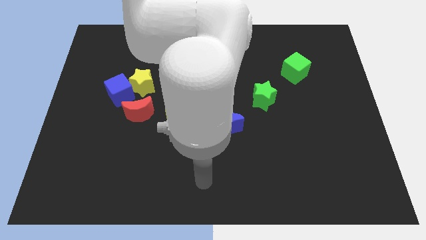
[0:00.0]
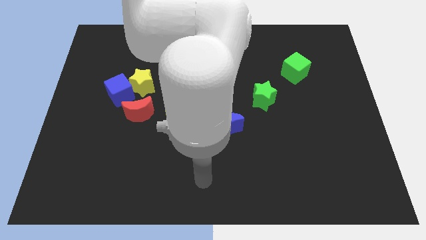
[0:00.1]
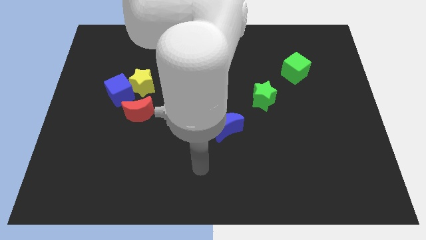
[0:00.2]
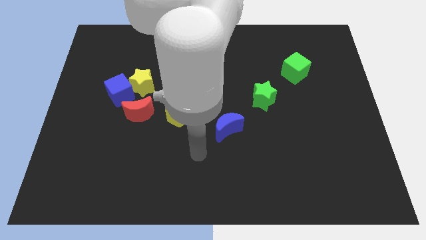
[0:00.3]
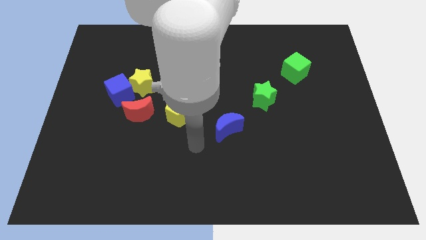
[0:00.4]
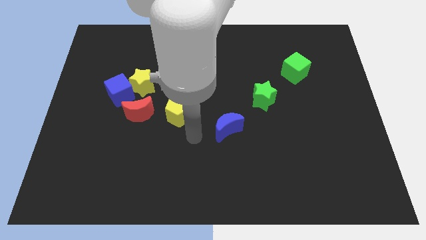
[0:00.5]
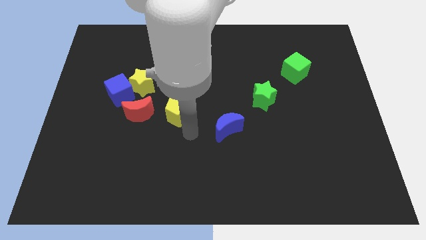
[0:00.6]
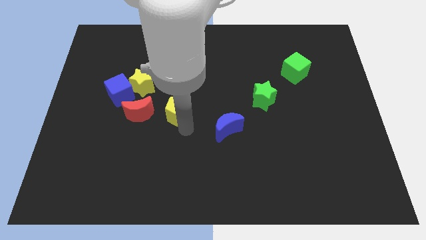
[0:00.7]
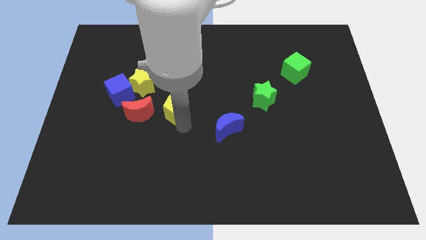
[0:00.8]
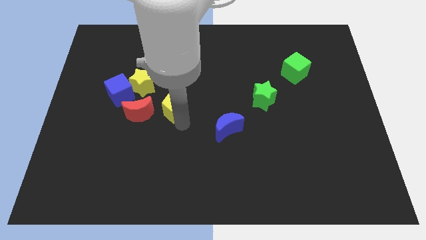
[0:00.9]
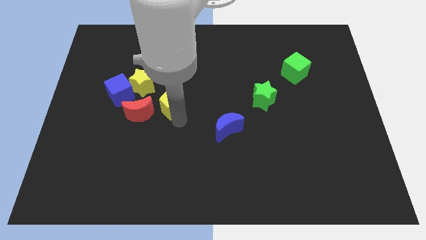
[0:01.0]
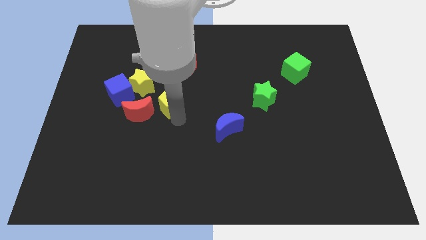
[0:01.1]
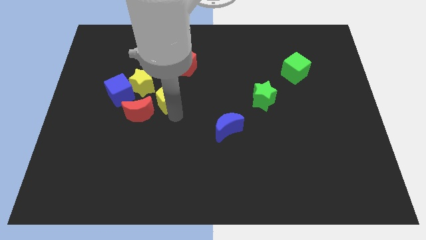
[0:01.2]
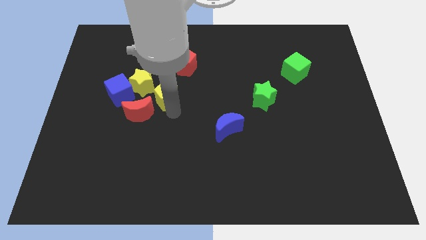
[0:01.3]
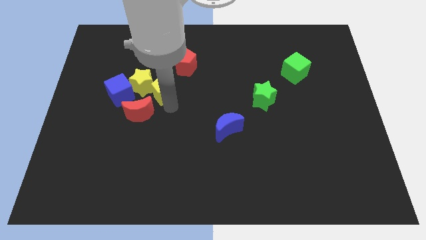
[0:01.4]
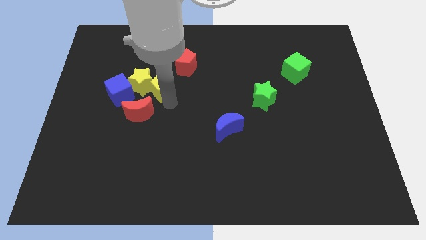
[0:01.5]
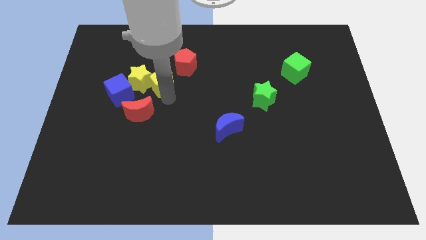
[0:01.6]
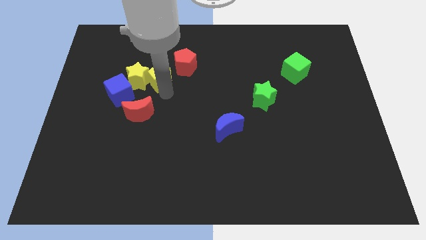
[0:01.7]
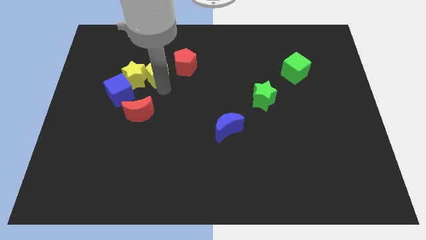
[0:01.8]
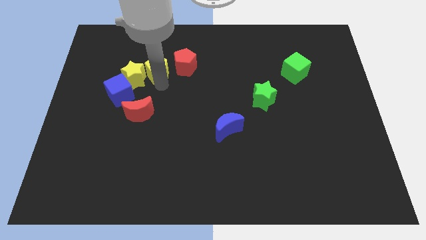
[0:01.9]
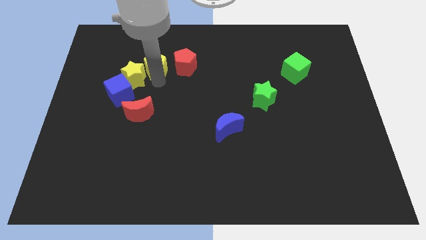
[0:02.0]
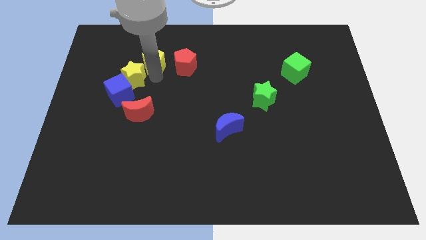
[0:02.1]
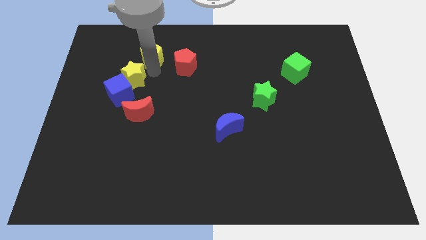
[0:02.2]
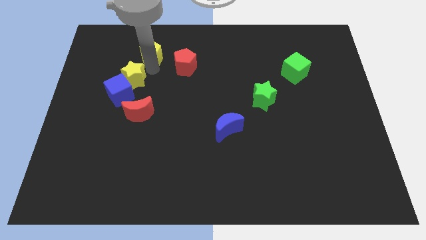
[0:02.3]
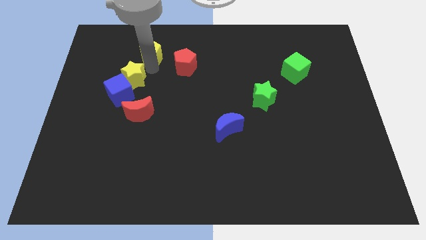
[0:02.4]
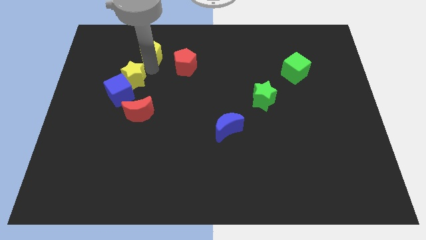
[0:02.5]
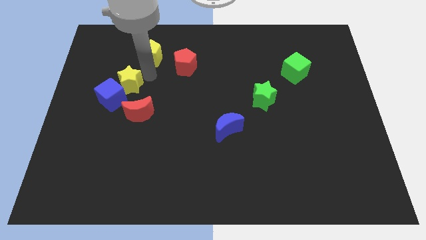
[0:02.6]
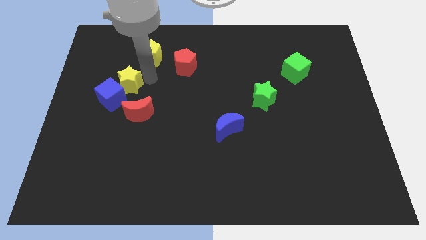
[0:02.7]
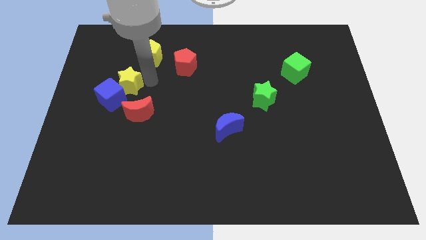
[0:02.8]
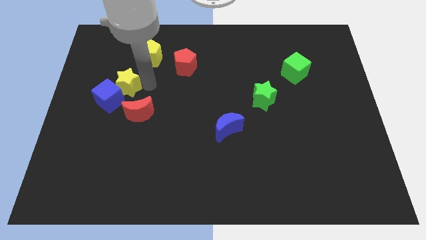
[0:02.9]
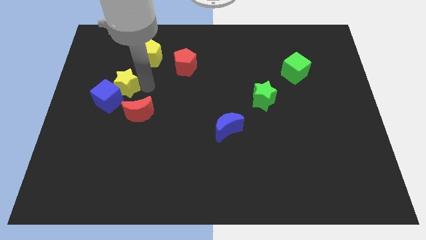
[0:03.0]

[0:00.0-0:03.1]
place the yellow pentagon diagonally top right to the yellow star

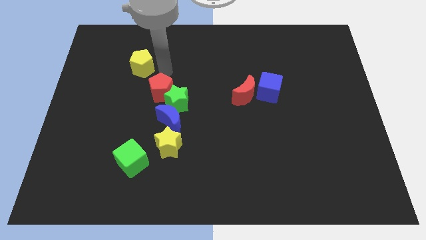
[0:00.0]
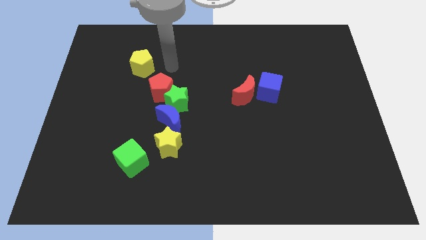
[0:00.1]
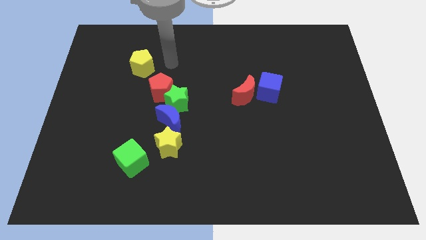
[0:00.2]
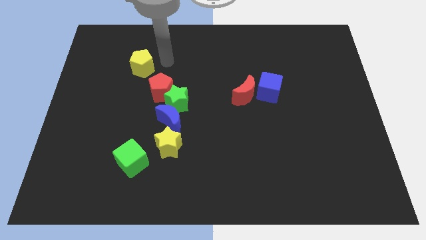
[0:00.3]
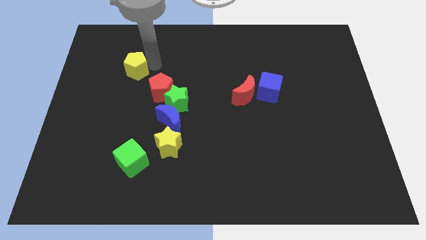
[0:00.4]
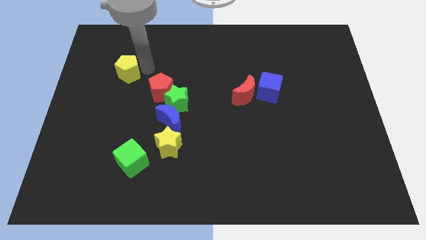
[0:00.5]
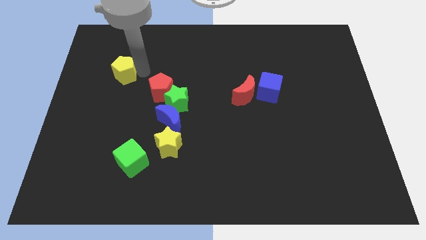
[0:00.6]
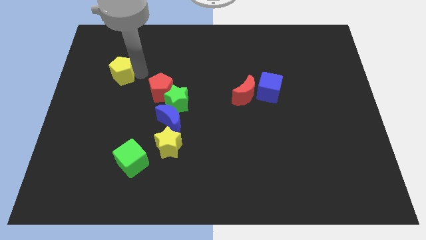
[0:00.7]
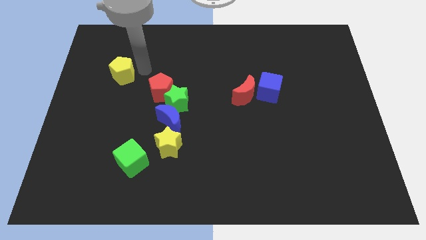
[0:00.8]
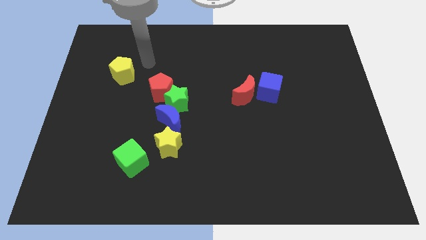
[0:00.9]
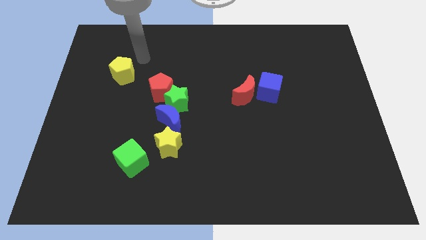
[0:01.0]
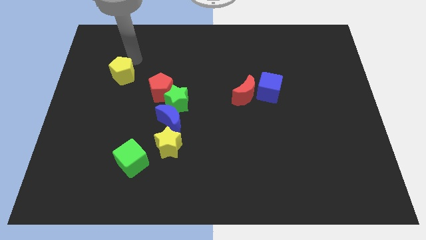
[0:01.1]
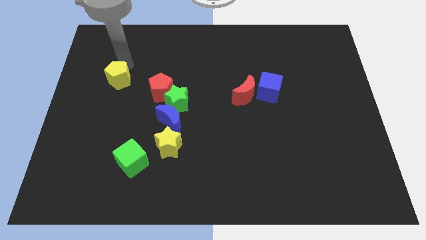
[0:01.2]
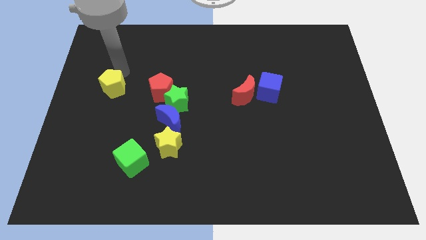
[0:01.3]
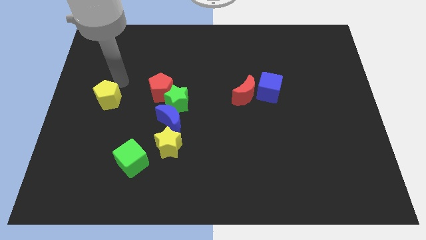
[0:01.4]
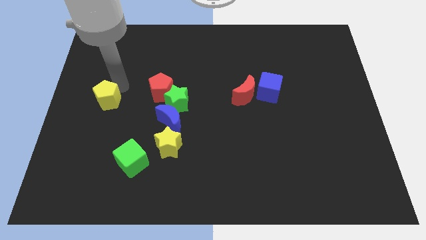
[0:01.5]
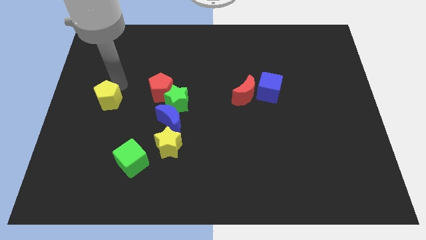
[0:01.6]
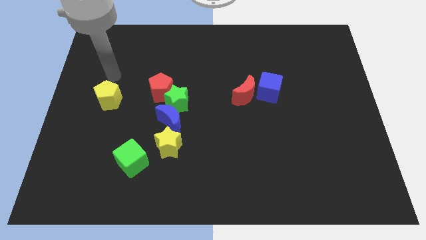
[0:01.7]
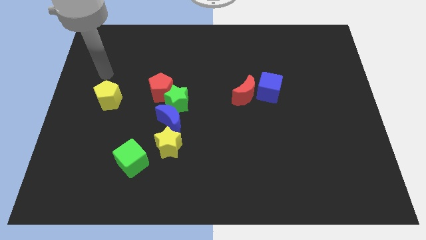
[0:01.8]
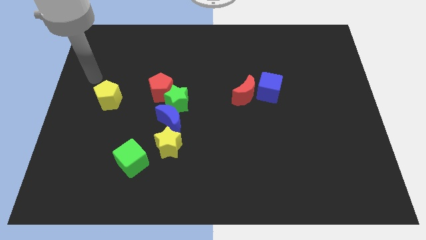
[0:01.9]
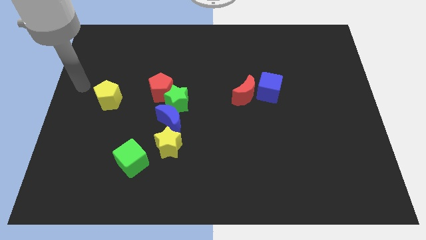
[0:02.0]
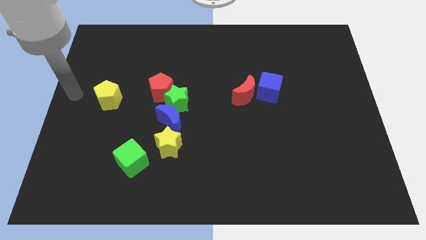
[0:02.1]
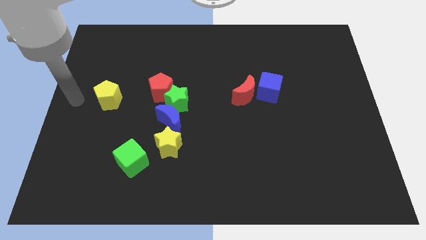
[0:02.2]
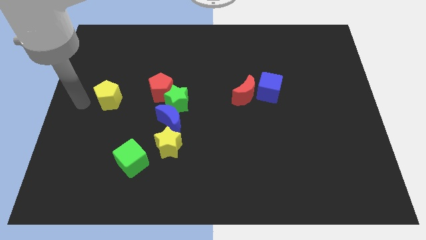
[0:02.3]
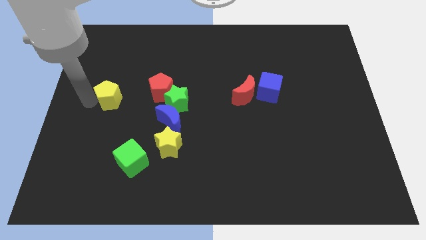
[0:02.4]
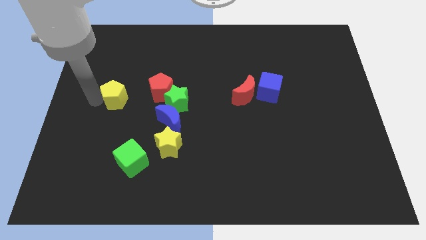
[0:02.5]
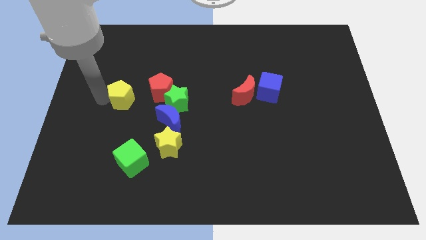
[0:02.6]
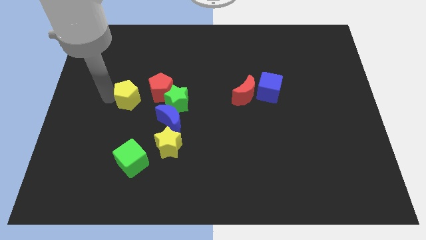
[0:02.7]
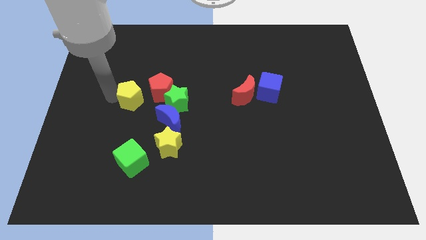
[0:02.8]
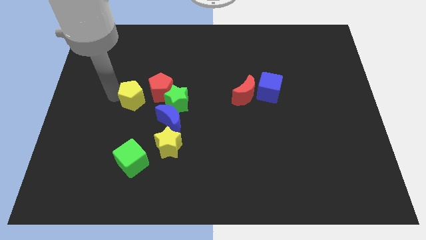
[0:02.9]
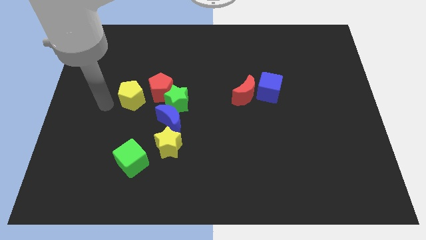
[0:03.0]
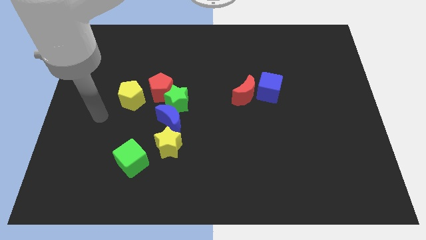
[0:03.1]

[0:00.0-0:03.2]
push the yellow pentagon at the left side of the red pentagon

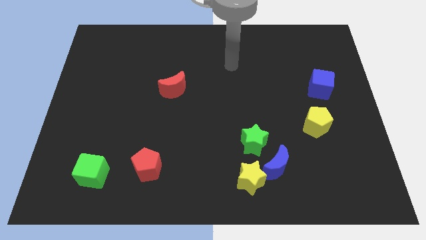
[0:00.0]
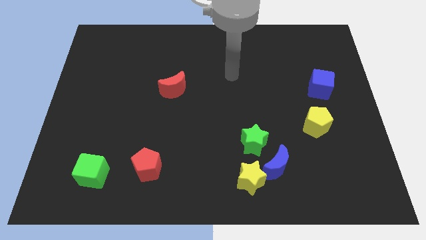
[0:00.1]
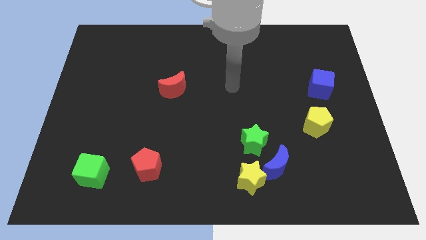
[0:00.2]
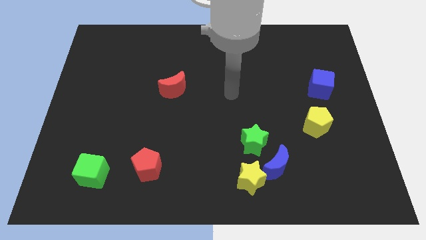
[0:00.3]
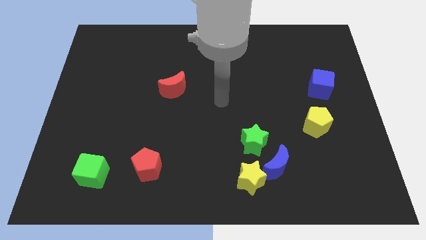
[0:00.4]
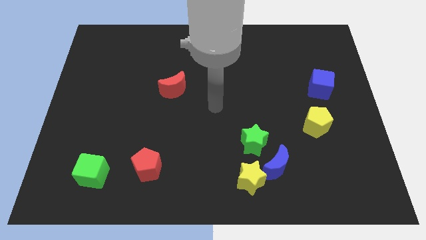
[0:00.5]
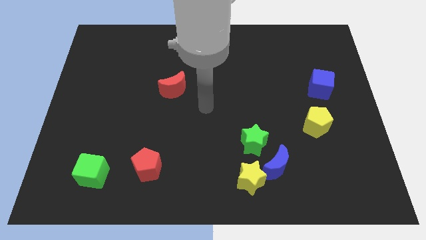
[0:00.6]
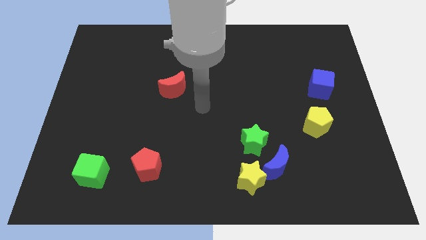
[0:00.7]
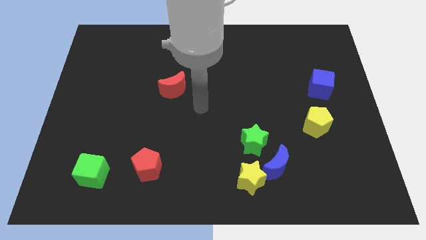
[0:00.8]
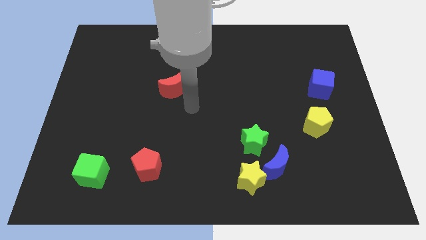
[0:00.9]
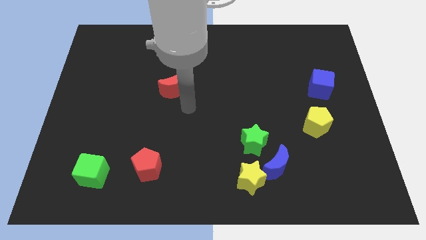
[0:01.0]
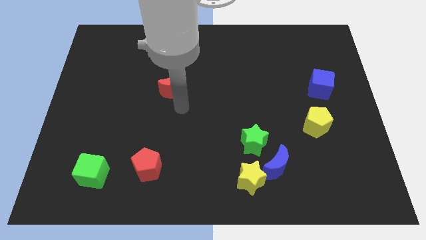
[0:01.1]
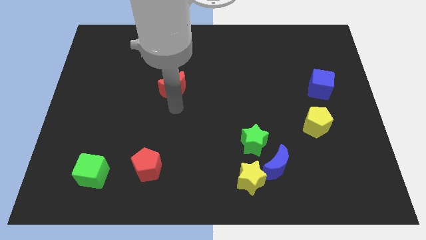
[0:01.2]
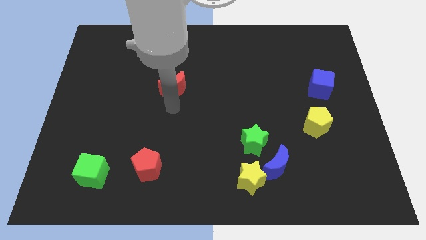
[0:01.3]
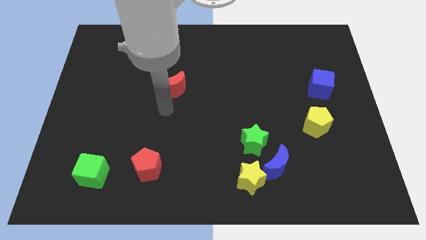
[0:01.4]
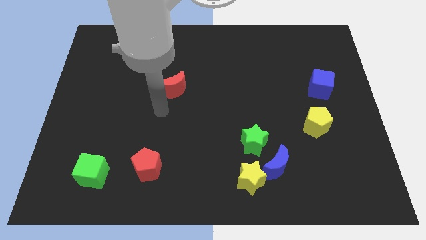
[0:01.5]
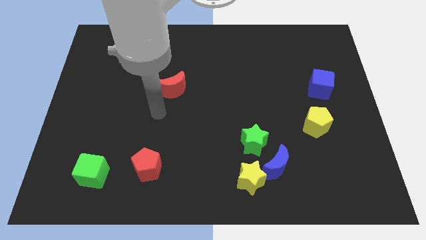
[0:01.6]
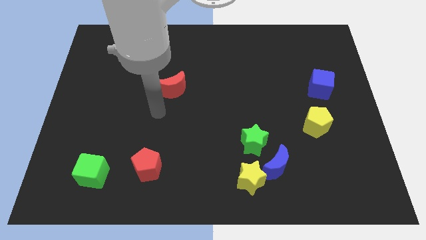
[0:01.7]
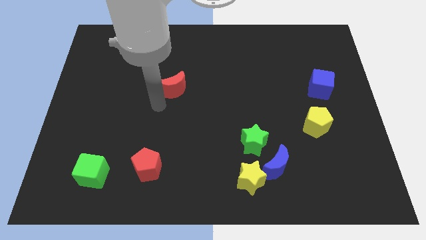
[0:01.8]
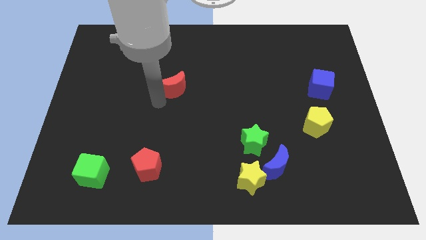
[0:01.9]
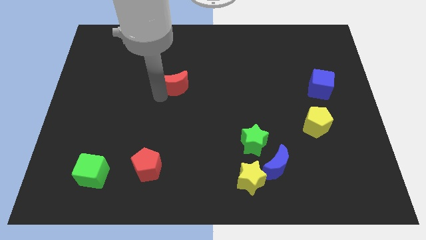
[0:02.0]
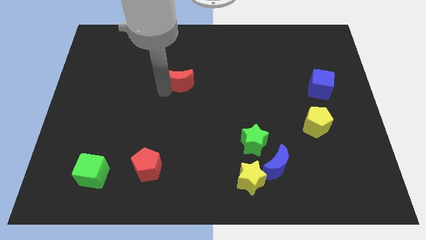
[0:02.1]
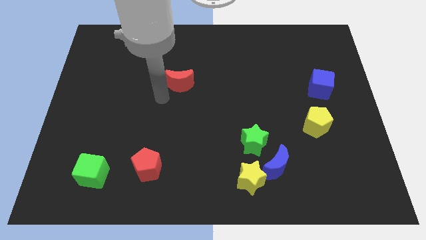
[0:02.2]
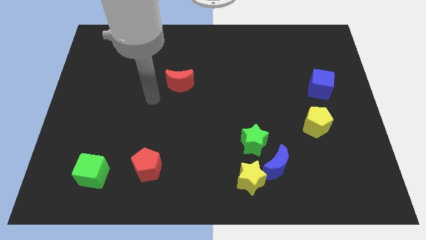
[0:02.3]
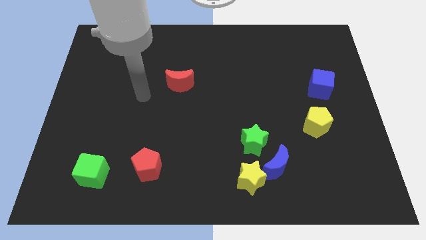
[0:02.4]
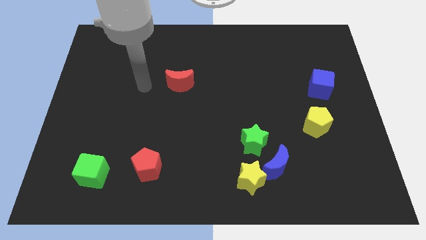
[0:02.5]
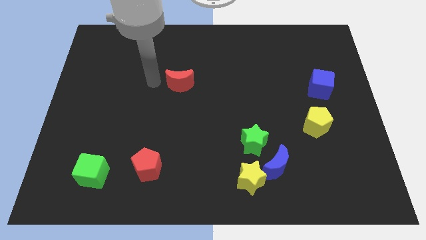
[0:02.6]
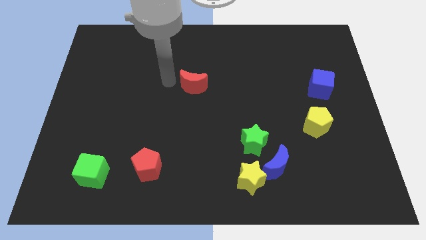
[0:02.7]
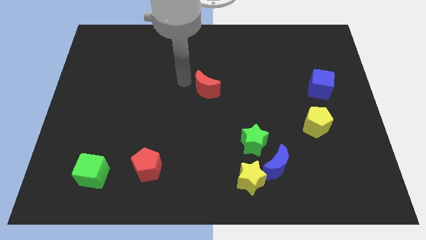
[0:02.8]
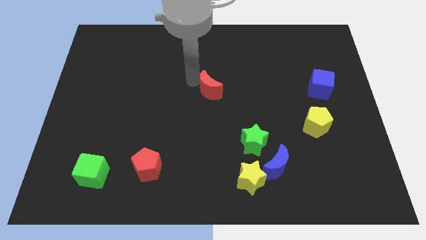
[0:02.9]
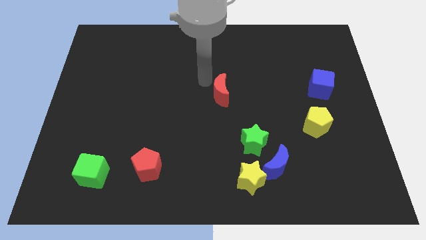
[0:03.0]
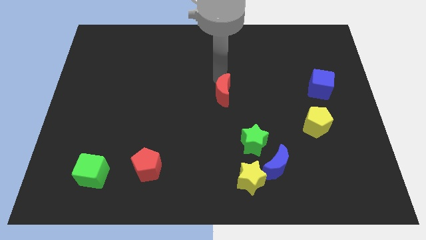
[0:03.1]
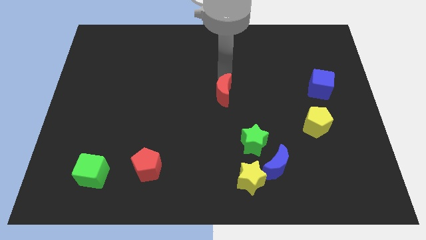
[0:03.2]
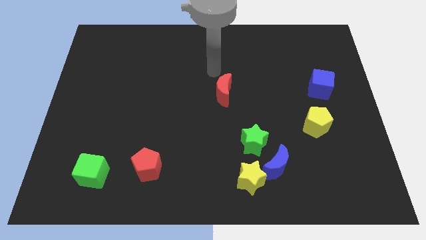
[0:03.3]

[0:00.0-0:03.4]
move red moon on right side of the board
